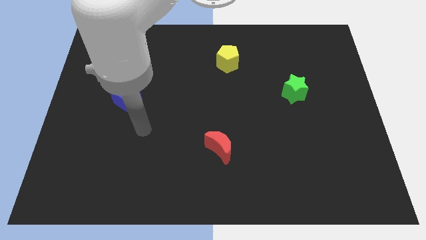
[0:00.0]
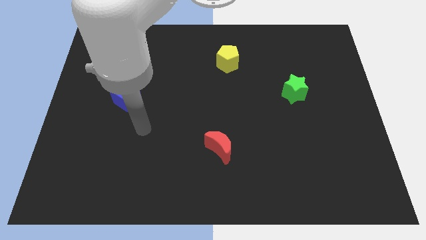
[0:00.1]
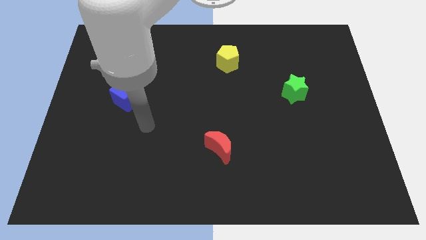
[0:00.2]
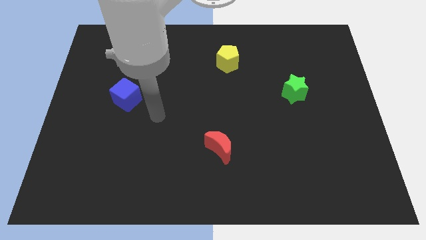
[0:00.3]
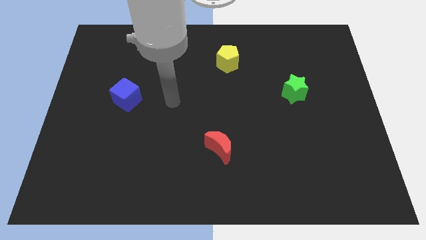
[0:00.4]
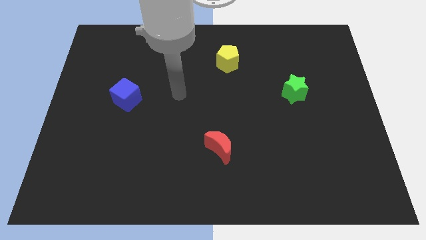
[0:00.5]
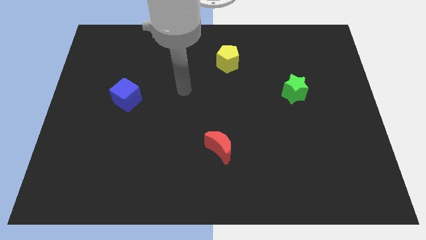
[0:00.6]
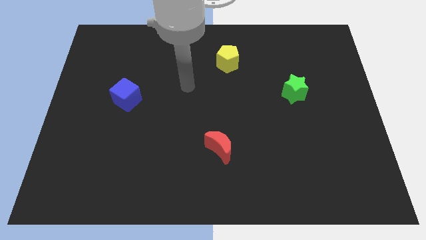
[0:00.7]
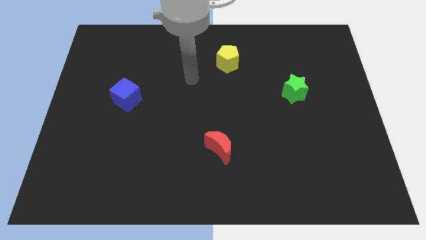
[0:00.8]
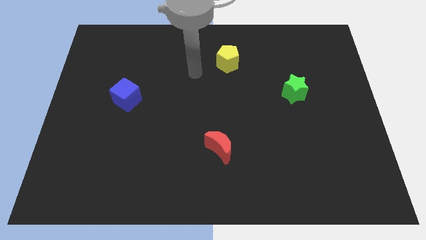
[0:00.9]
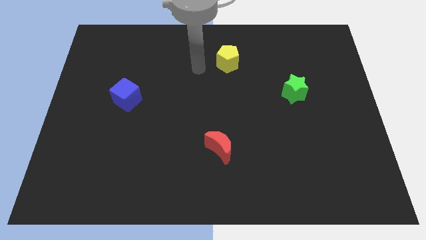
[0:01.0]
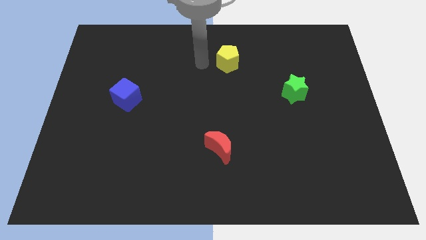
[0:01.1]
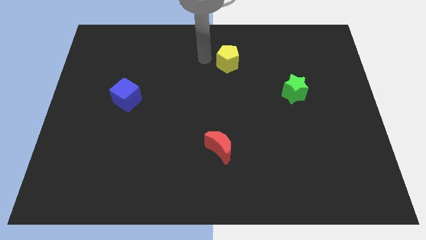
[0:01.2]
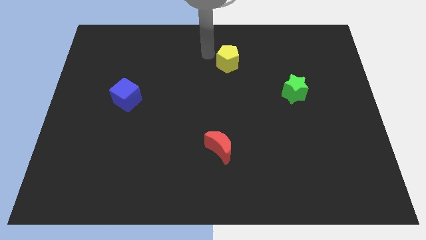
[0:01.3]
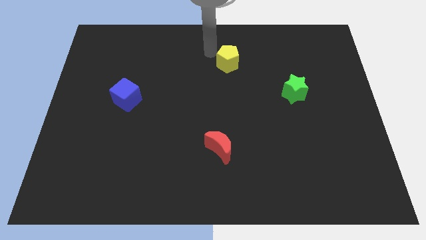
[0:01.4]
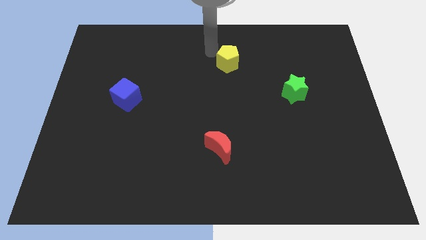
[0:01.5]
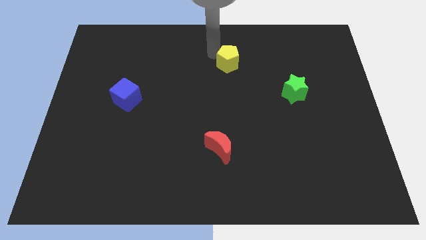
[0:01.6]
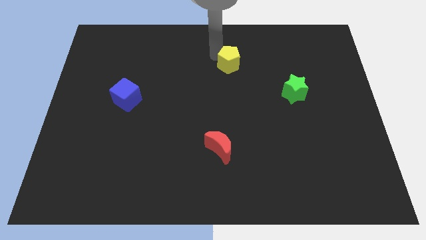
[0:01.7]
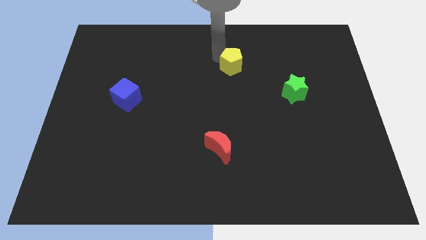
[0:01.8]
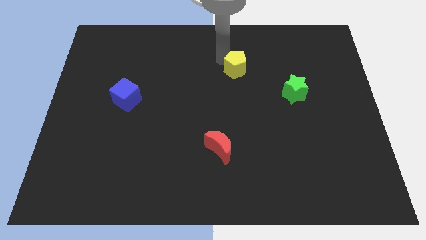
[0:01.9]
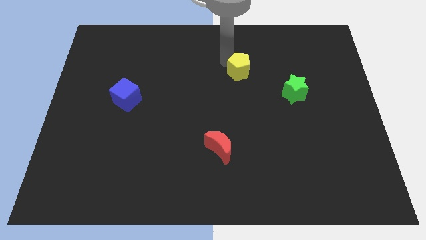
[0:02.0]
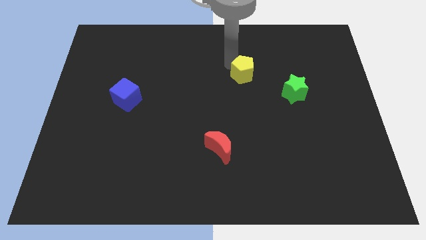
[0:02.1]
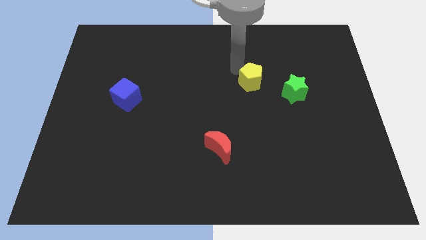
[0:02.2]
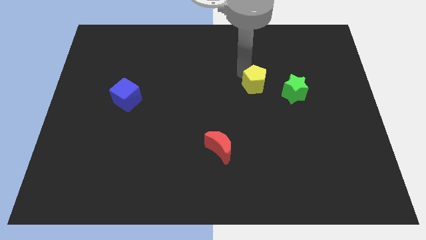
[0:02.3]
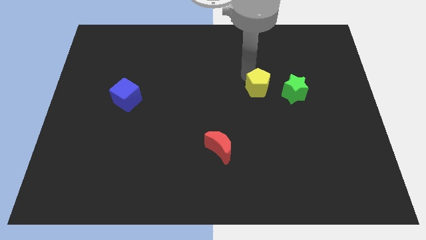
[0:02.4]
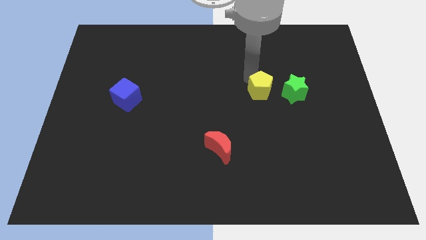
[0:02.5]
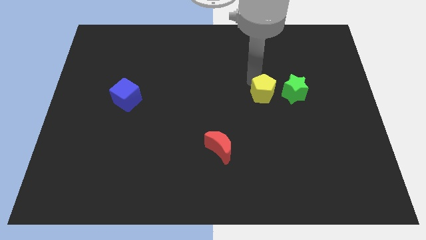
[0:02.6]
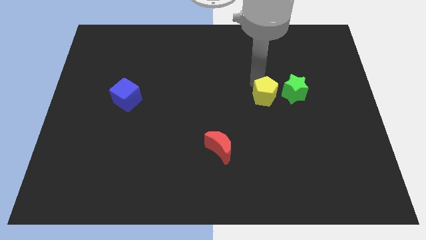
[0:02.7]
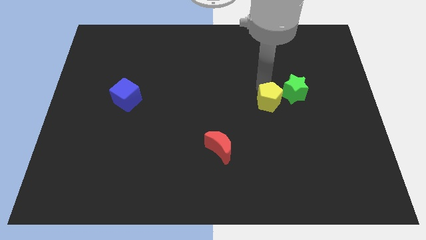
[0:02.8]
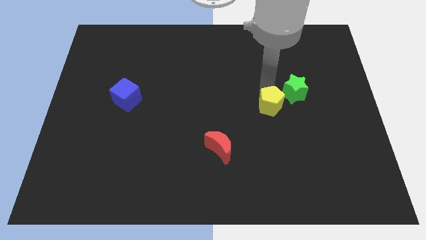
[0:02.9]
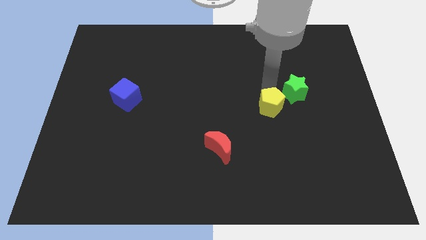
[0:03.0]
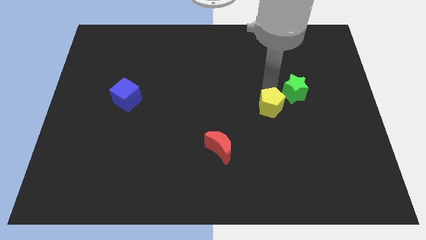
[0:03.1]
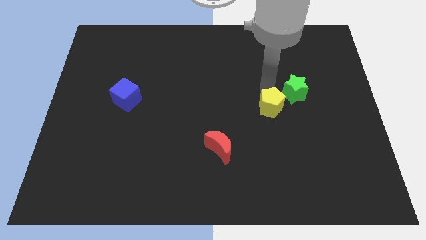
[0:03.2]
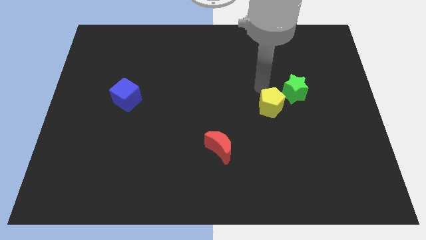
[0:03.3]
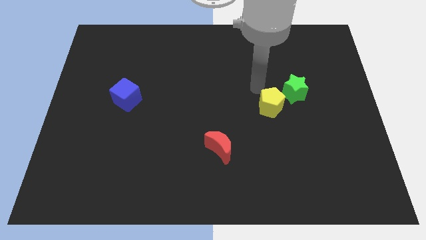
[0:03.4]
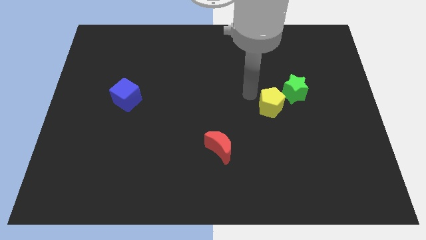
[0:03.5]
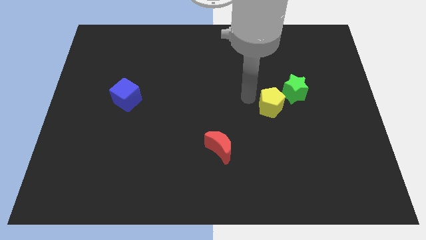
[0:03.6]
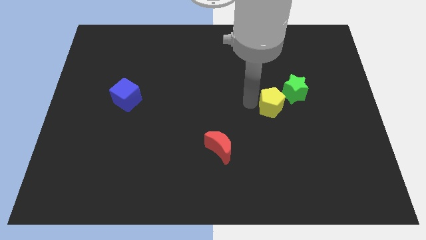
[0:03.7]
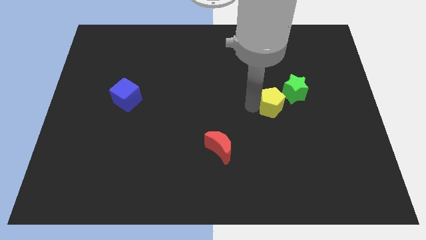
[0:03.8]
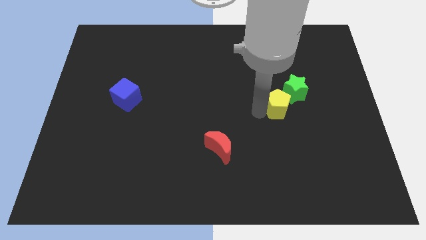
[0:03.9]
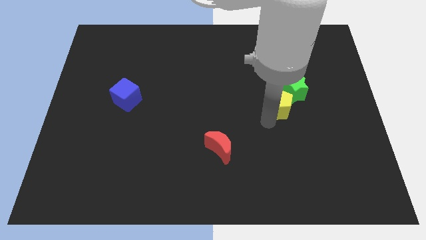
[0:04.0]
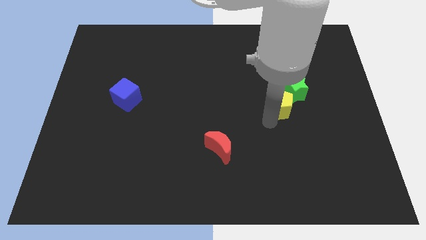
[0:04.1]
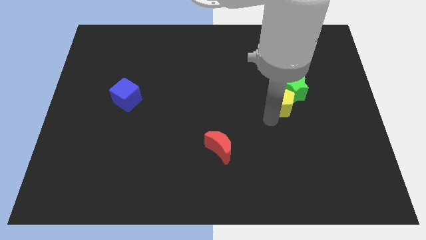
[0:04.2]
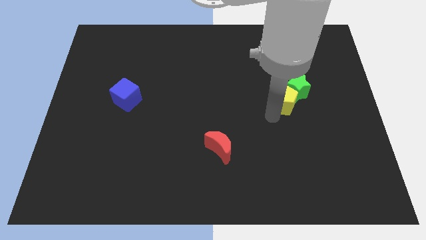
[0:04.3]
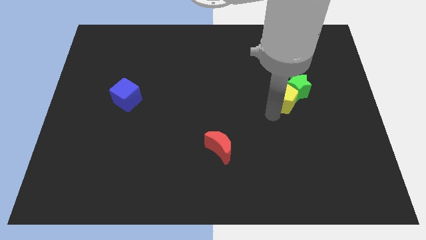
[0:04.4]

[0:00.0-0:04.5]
slide the pentagon to the green star

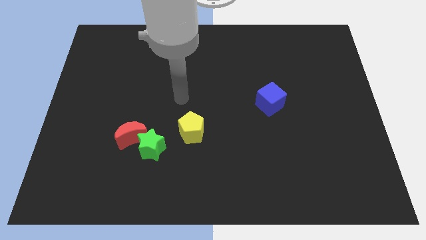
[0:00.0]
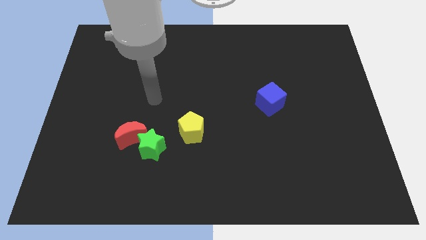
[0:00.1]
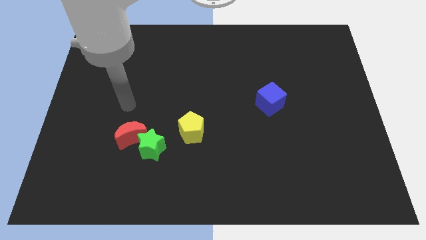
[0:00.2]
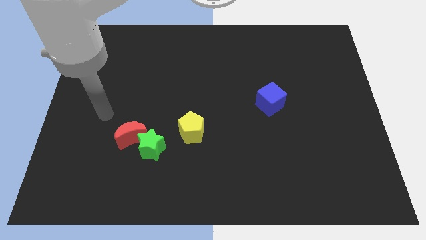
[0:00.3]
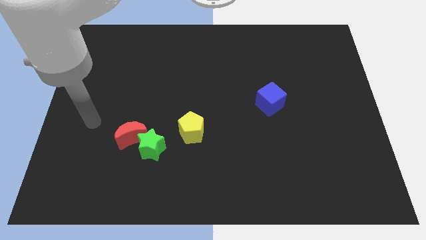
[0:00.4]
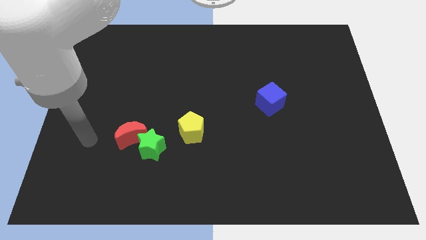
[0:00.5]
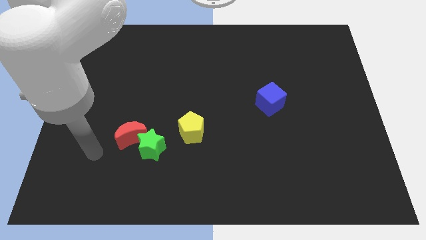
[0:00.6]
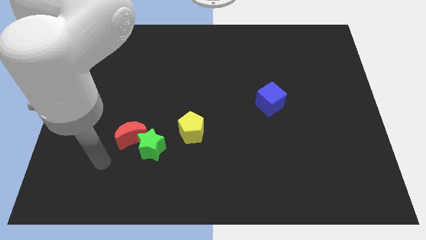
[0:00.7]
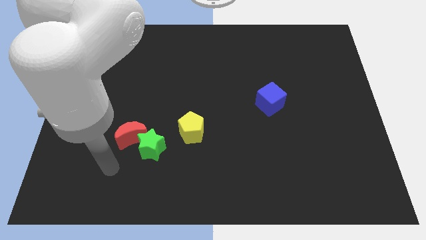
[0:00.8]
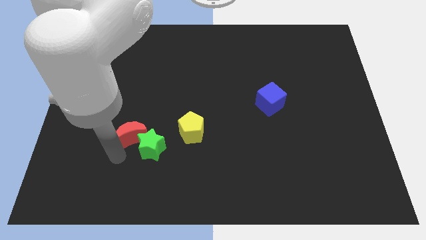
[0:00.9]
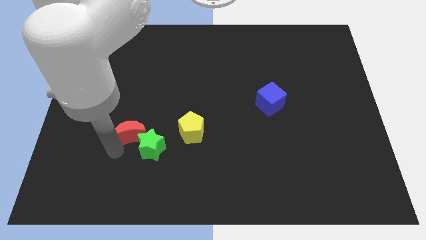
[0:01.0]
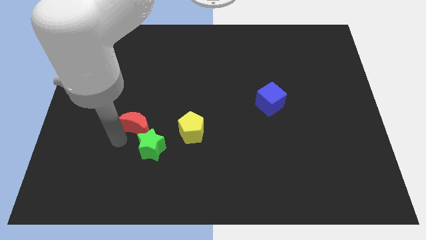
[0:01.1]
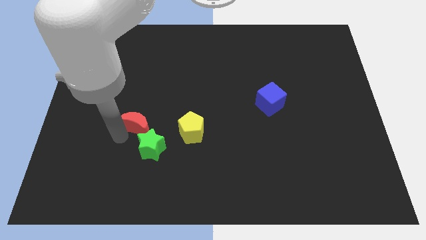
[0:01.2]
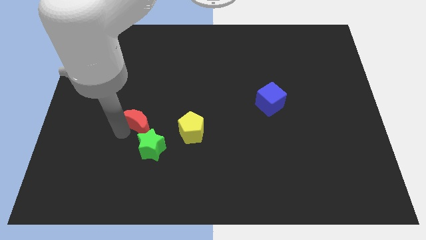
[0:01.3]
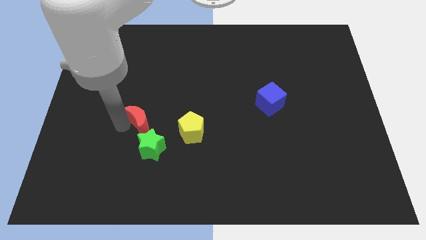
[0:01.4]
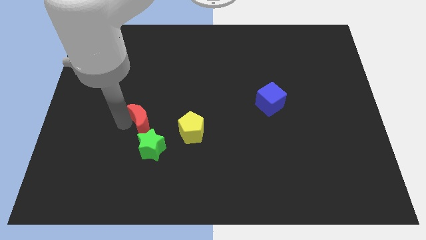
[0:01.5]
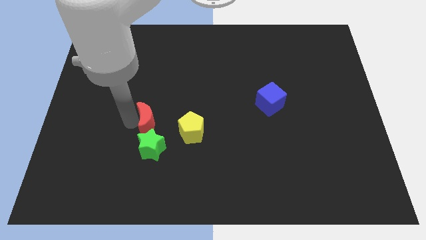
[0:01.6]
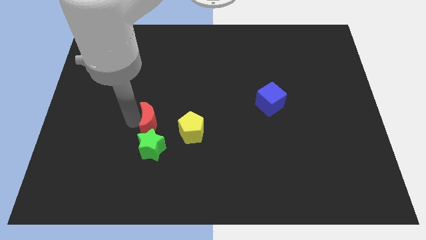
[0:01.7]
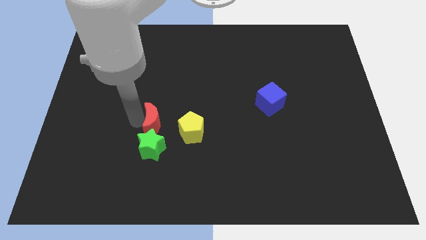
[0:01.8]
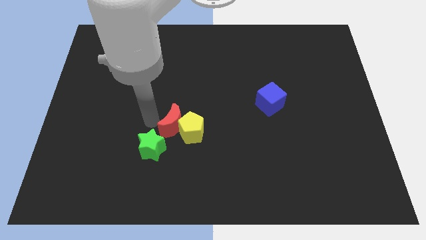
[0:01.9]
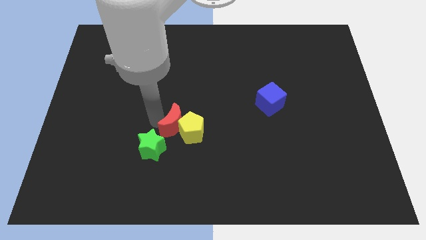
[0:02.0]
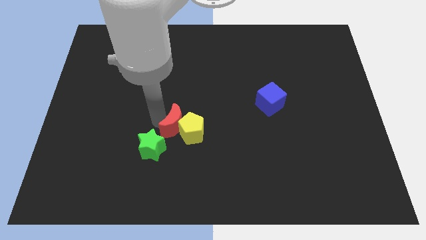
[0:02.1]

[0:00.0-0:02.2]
push the moon towards the yellow pentagon

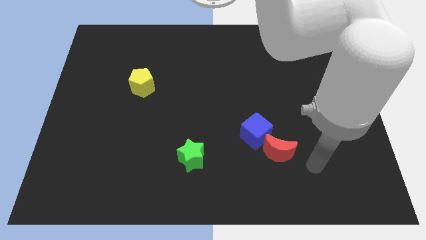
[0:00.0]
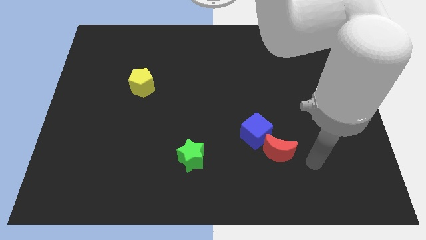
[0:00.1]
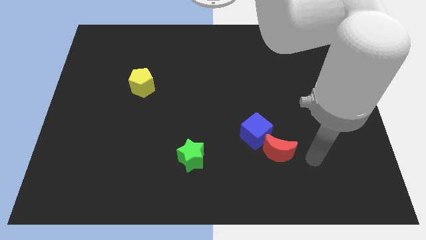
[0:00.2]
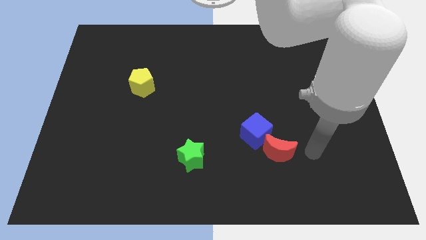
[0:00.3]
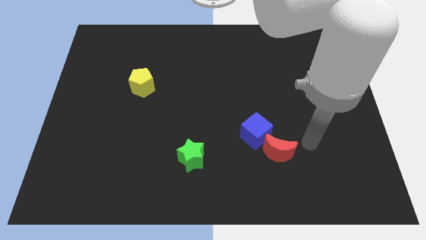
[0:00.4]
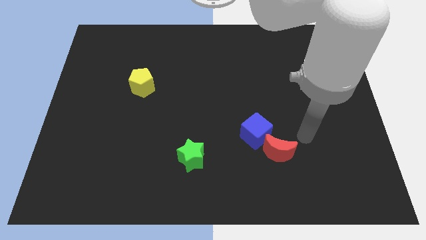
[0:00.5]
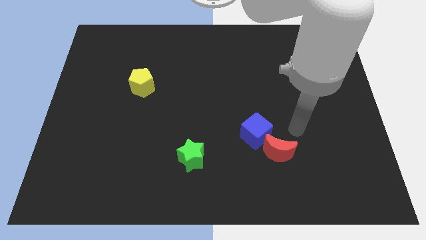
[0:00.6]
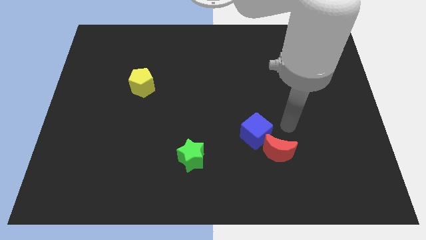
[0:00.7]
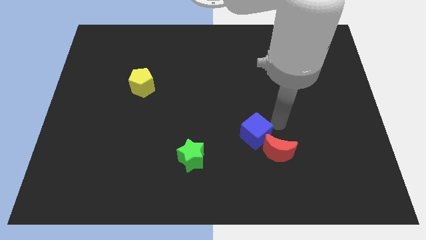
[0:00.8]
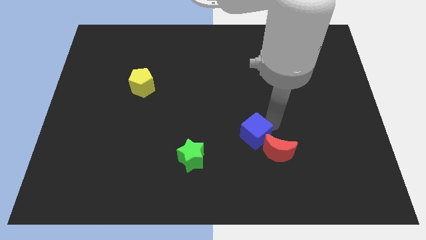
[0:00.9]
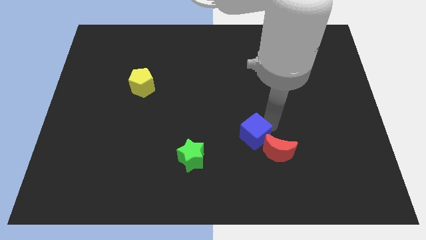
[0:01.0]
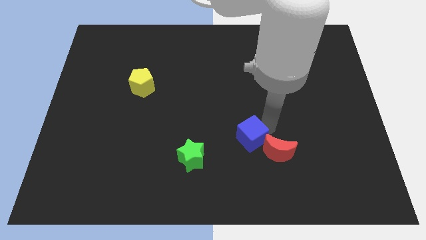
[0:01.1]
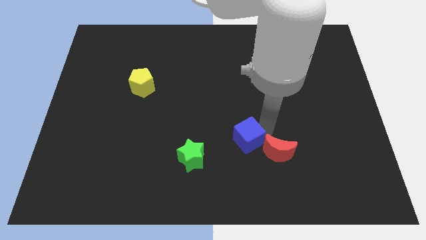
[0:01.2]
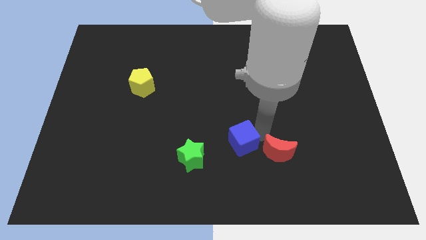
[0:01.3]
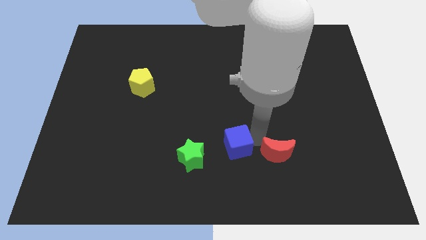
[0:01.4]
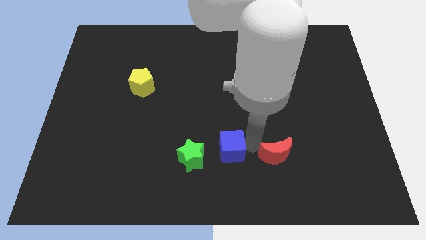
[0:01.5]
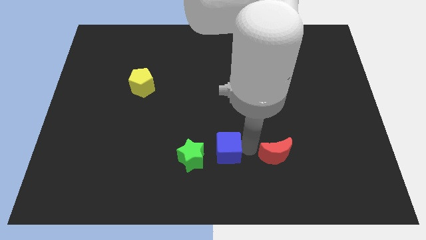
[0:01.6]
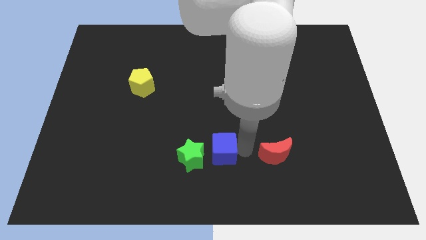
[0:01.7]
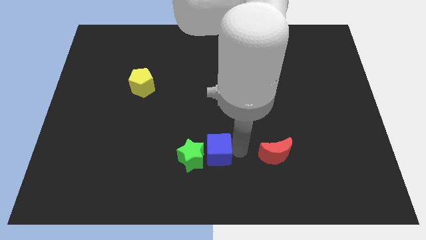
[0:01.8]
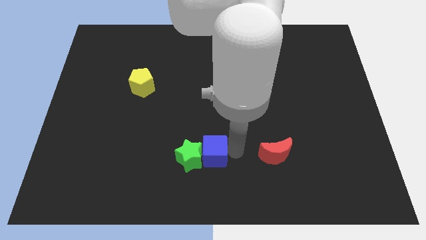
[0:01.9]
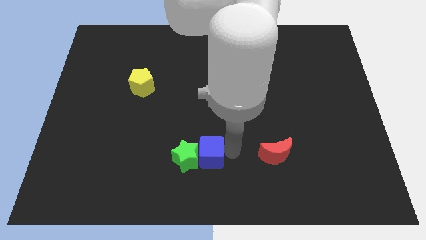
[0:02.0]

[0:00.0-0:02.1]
put the blue block close to the green star
